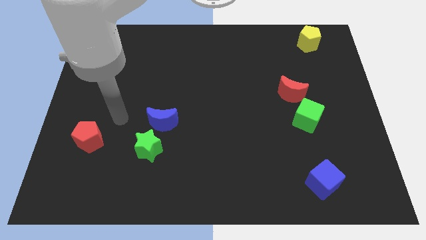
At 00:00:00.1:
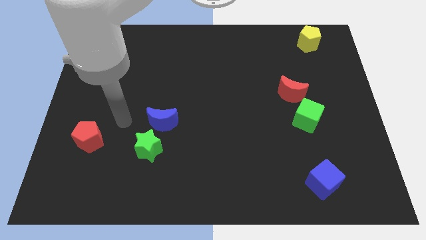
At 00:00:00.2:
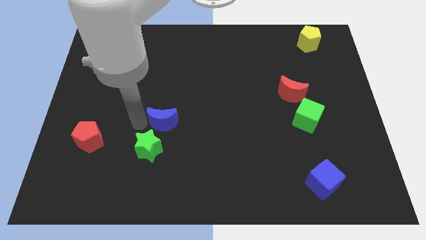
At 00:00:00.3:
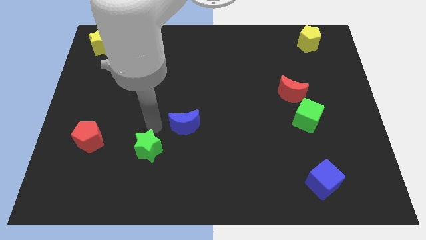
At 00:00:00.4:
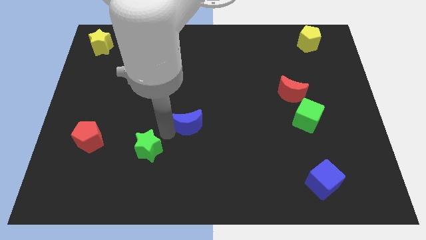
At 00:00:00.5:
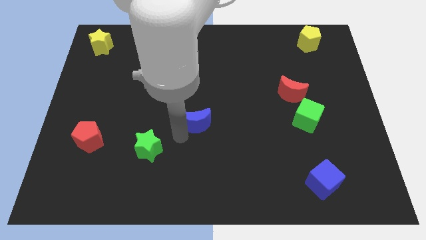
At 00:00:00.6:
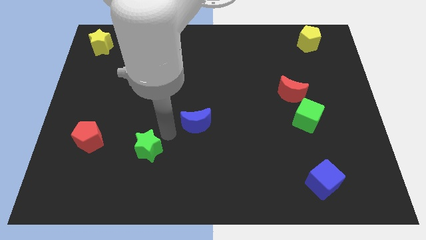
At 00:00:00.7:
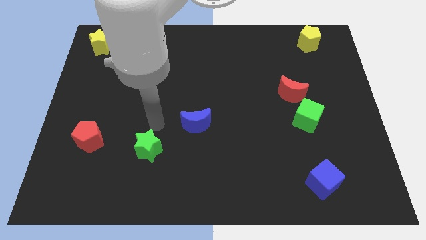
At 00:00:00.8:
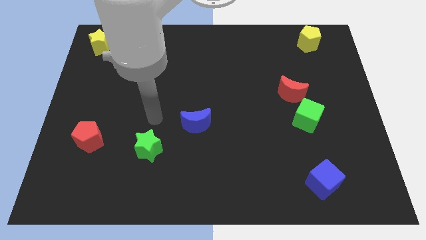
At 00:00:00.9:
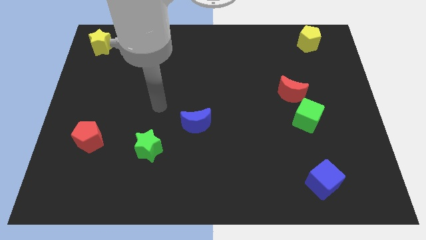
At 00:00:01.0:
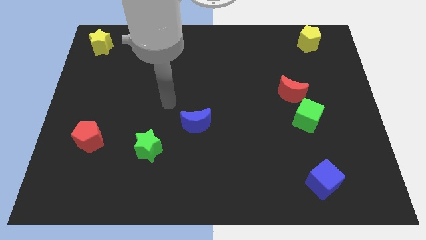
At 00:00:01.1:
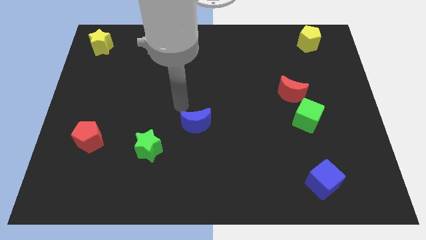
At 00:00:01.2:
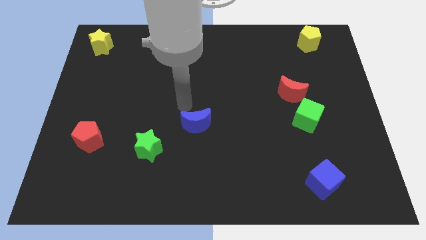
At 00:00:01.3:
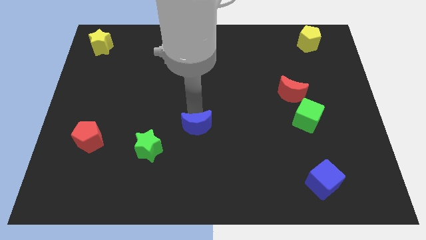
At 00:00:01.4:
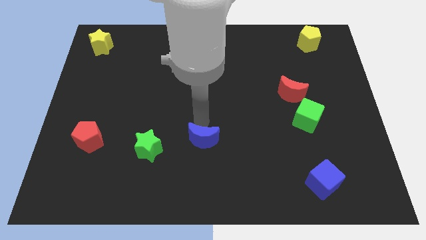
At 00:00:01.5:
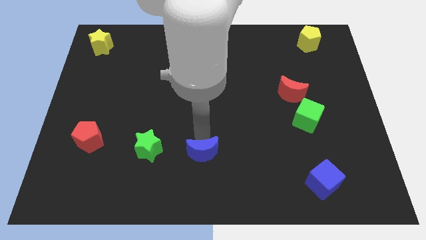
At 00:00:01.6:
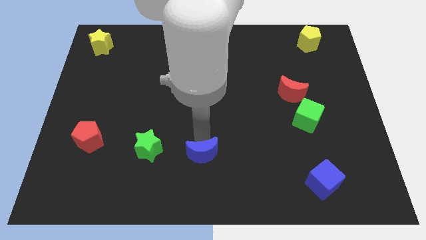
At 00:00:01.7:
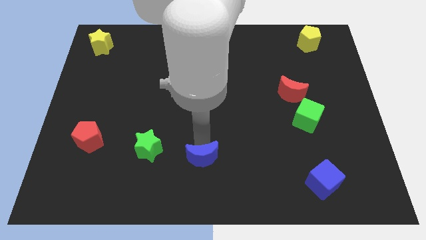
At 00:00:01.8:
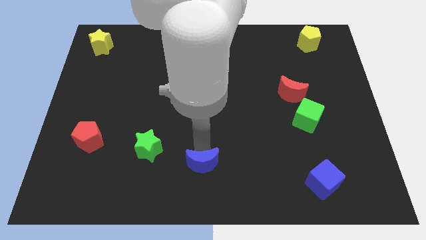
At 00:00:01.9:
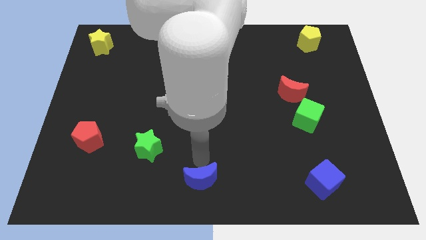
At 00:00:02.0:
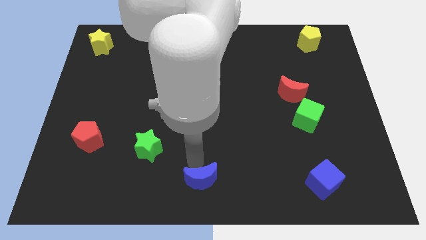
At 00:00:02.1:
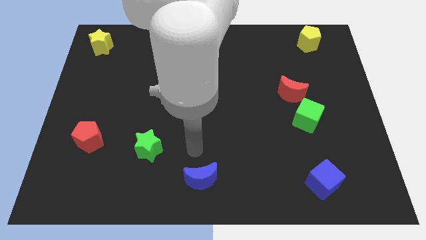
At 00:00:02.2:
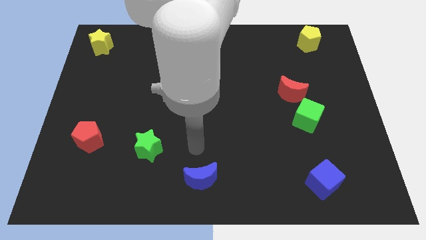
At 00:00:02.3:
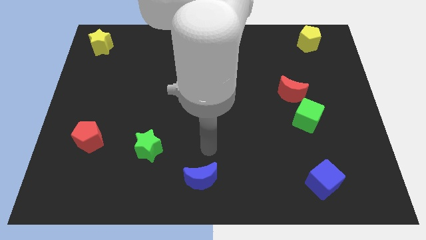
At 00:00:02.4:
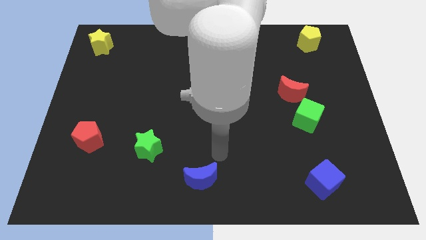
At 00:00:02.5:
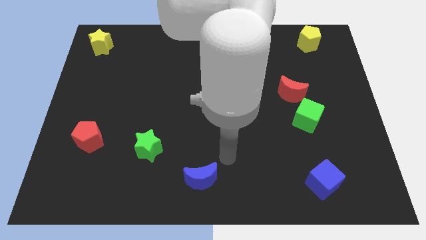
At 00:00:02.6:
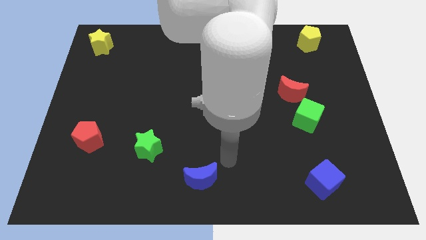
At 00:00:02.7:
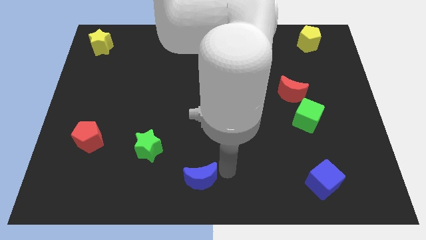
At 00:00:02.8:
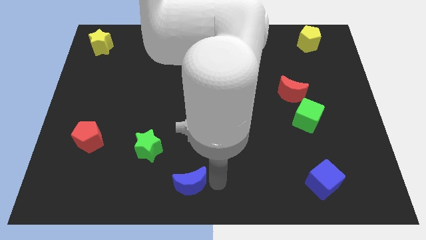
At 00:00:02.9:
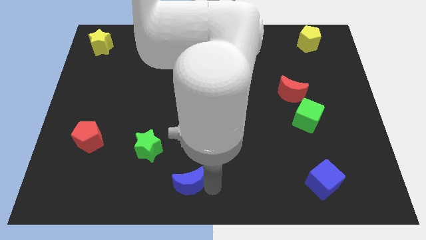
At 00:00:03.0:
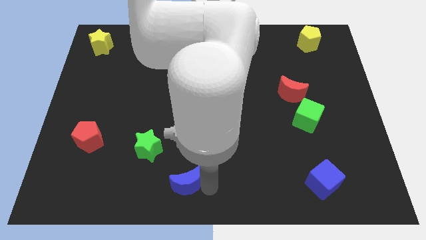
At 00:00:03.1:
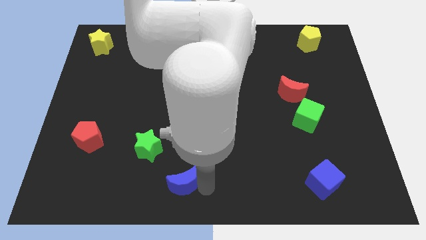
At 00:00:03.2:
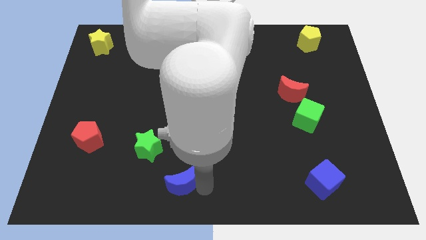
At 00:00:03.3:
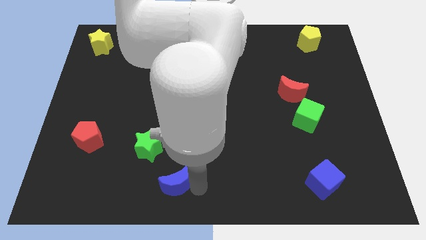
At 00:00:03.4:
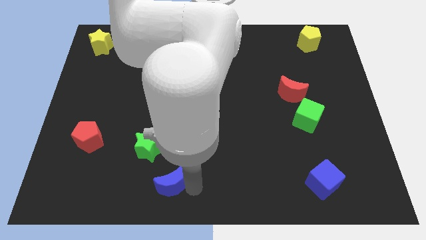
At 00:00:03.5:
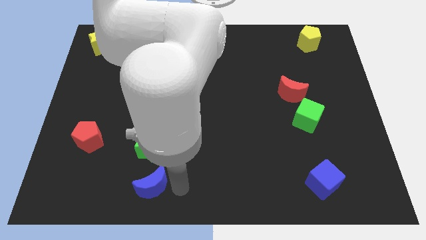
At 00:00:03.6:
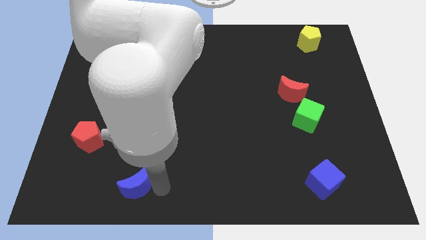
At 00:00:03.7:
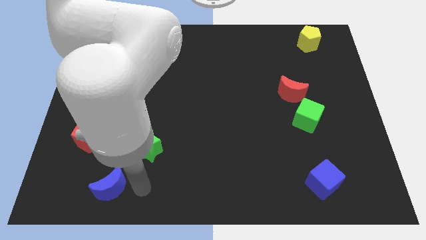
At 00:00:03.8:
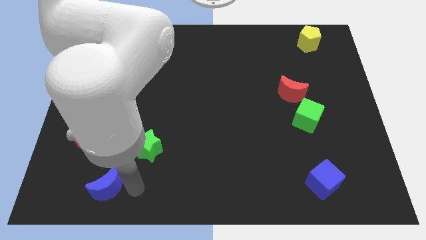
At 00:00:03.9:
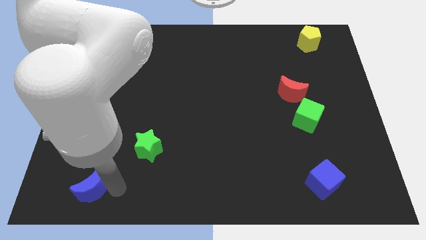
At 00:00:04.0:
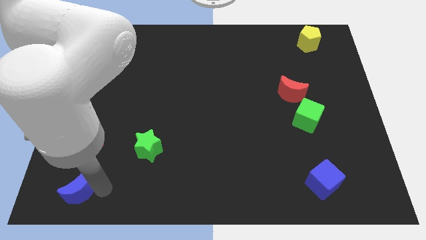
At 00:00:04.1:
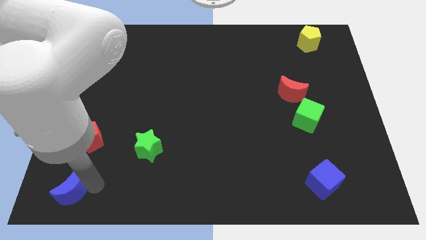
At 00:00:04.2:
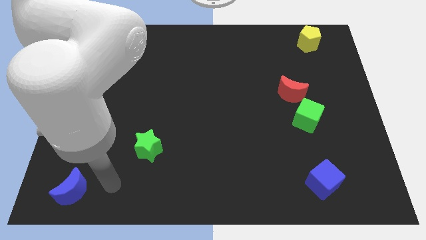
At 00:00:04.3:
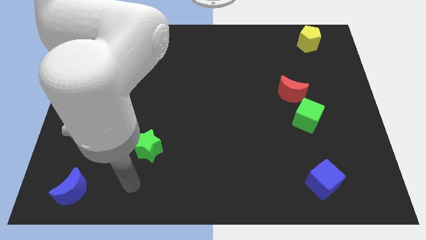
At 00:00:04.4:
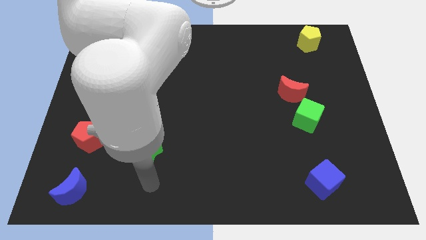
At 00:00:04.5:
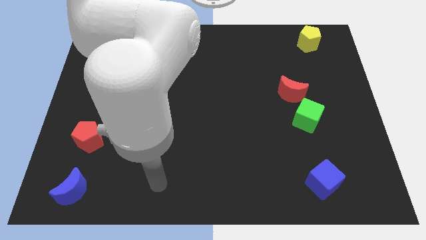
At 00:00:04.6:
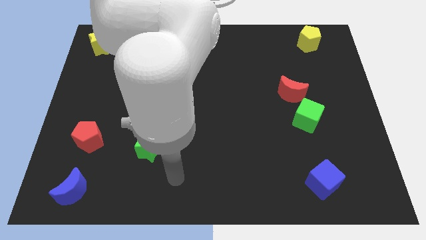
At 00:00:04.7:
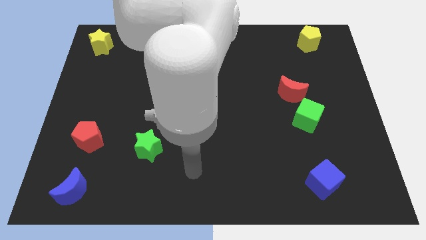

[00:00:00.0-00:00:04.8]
place the blue crescent at the bottom side of the red pentagon

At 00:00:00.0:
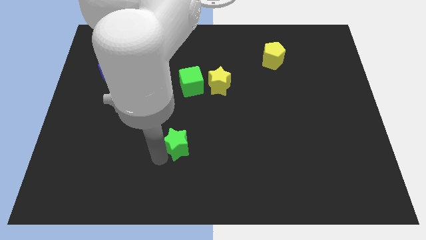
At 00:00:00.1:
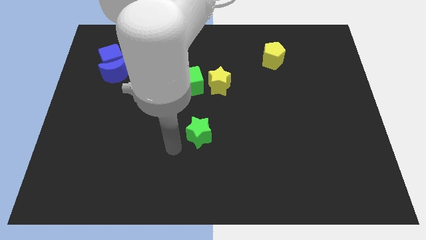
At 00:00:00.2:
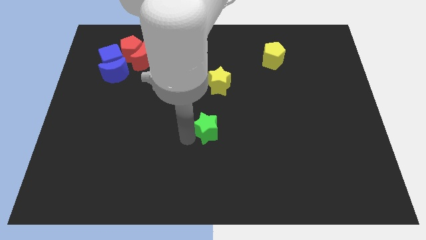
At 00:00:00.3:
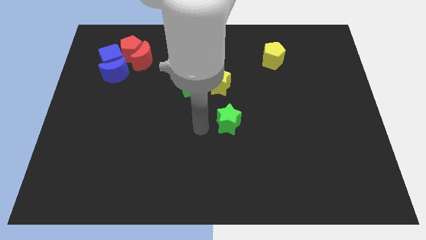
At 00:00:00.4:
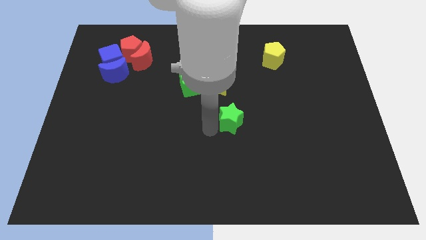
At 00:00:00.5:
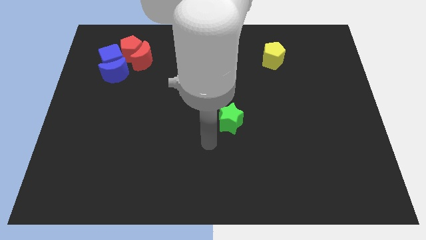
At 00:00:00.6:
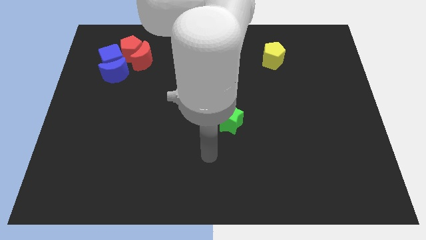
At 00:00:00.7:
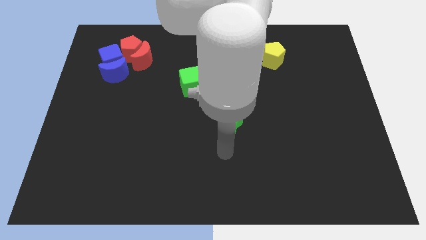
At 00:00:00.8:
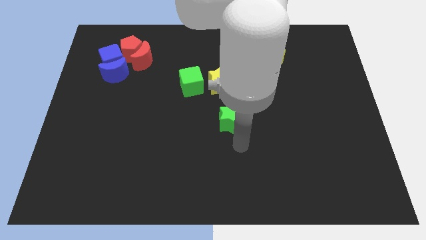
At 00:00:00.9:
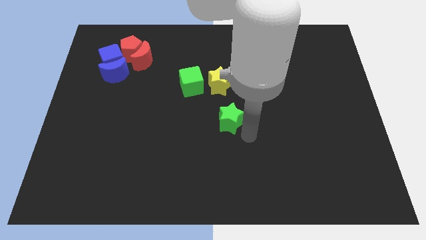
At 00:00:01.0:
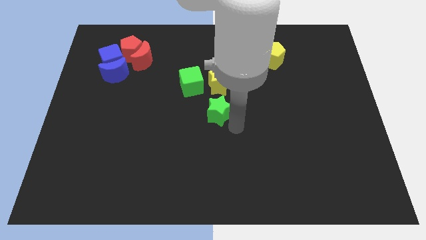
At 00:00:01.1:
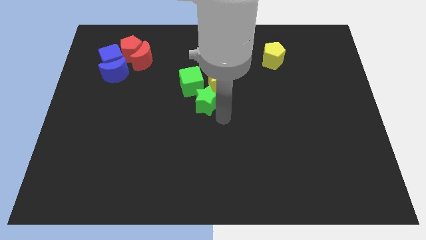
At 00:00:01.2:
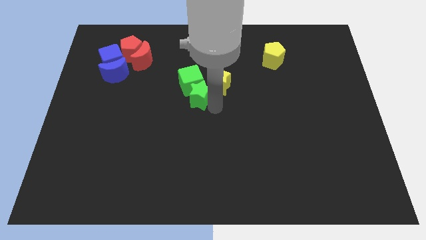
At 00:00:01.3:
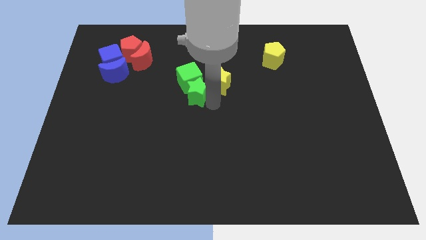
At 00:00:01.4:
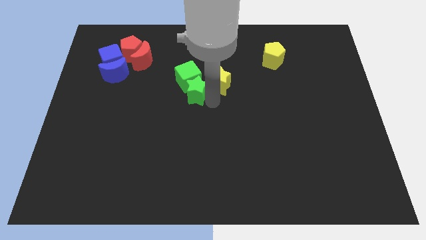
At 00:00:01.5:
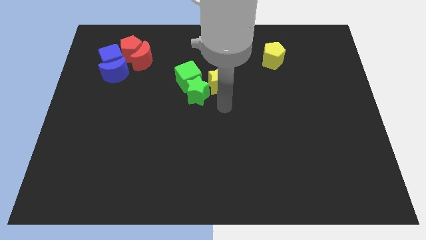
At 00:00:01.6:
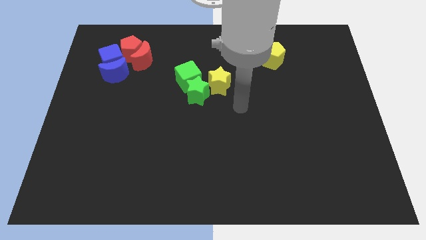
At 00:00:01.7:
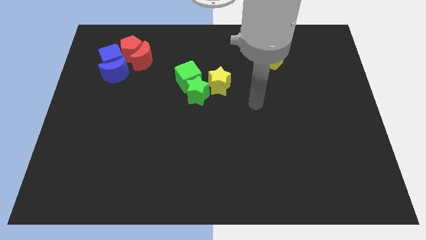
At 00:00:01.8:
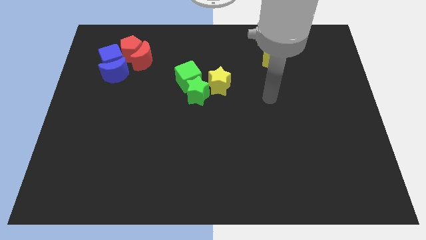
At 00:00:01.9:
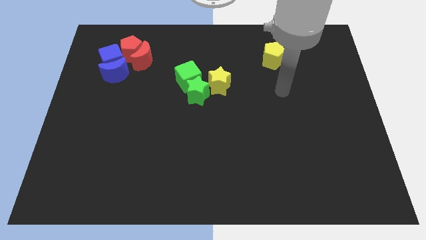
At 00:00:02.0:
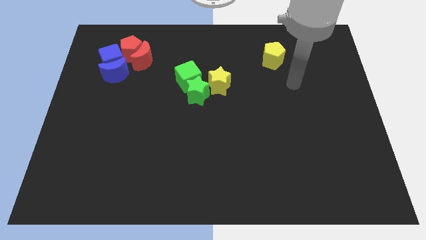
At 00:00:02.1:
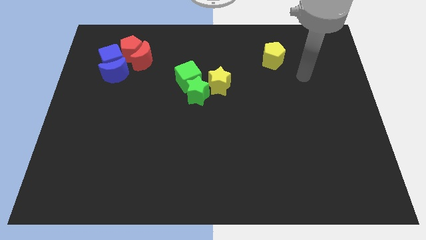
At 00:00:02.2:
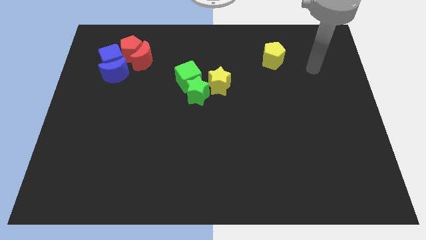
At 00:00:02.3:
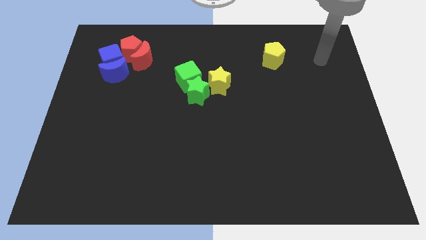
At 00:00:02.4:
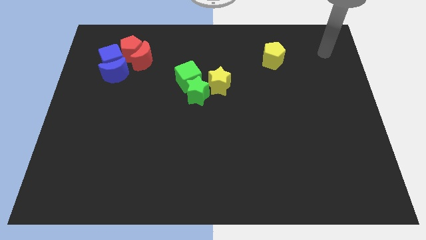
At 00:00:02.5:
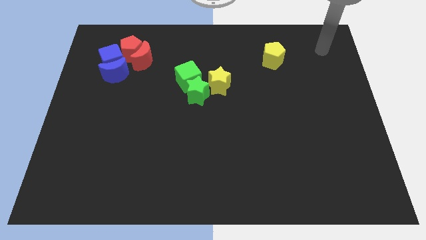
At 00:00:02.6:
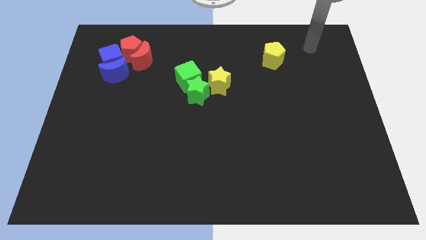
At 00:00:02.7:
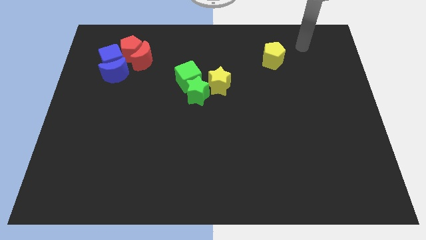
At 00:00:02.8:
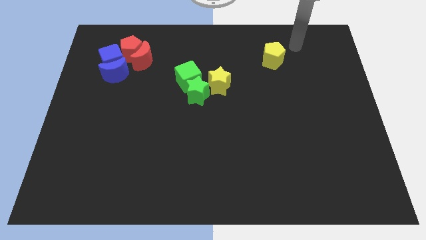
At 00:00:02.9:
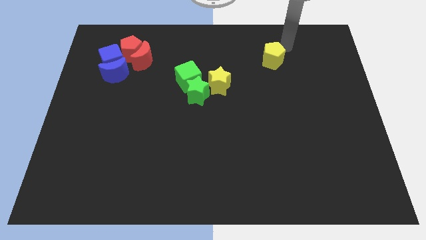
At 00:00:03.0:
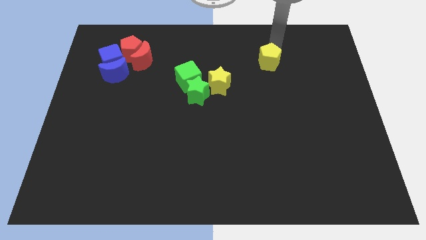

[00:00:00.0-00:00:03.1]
tap the yellow penntagon on the top side

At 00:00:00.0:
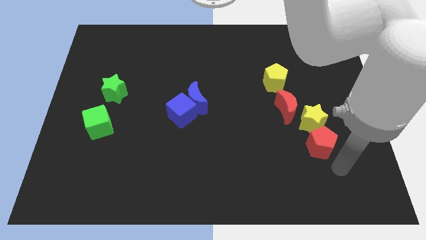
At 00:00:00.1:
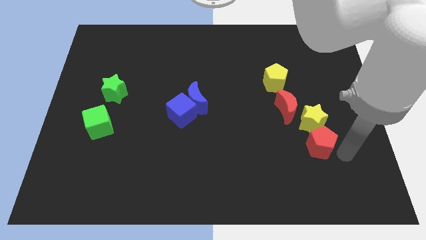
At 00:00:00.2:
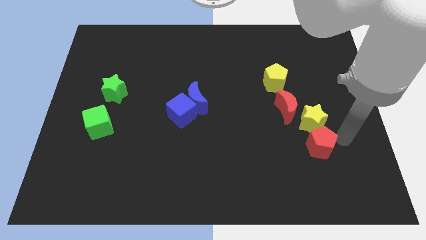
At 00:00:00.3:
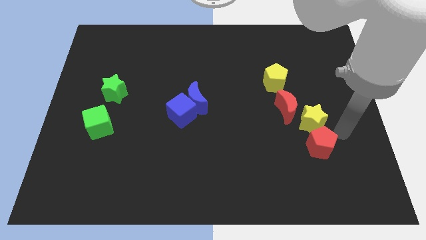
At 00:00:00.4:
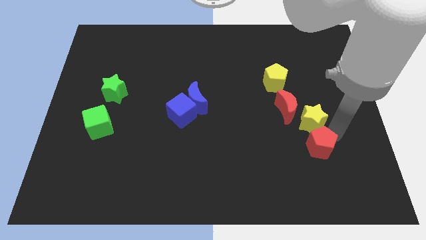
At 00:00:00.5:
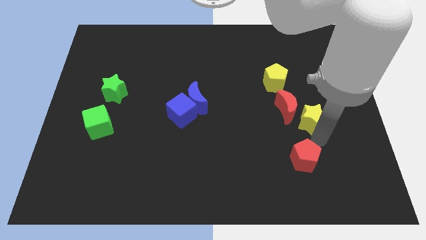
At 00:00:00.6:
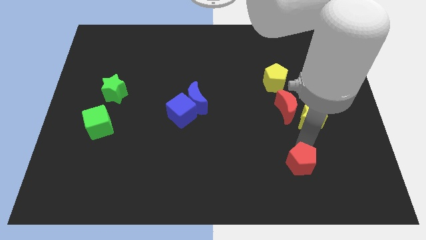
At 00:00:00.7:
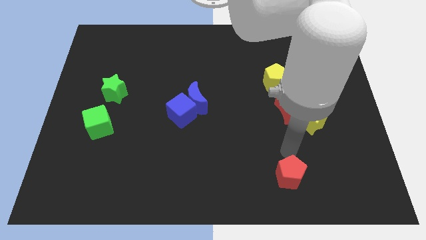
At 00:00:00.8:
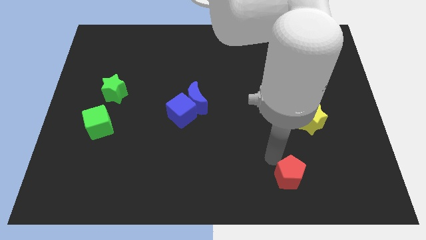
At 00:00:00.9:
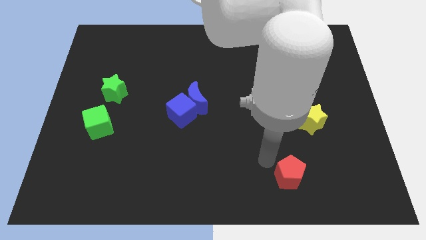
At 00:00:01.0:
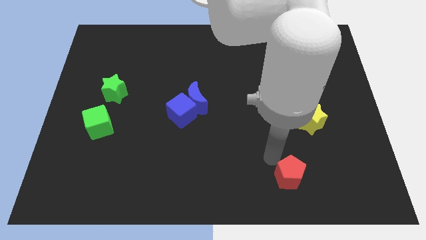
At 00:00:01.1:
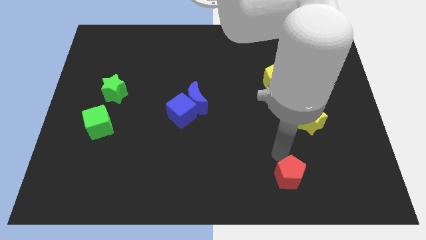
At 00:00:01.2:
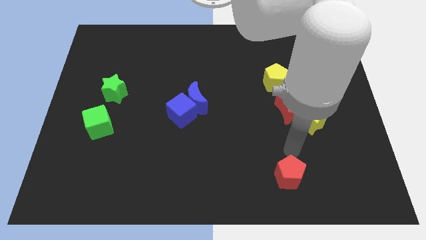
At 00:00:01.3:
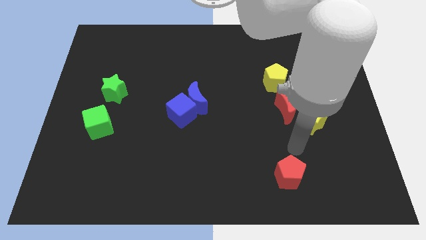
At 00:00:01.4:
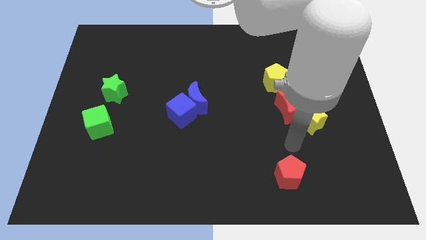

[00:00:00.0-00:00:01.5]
move the red pentagon away from the yellow star
